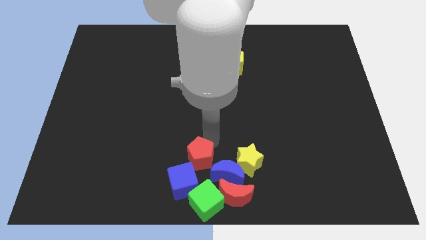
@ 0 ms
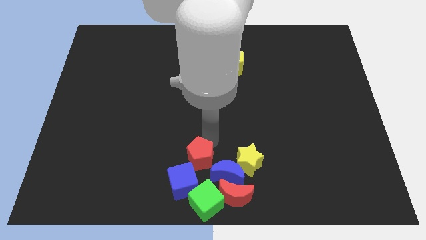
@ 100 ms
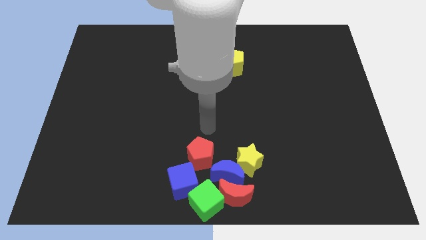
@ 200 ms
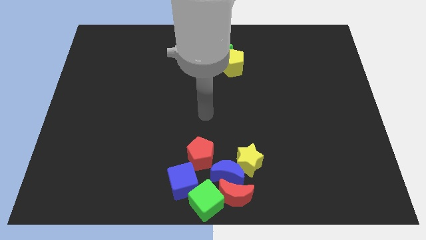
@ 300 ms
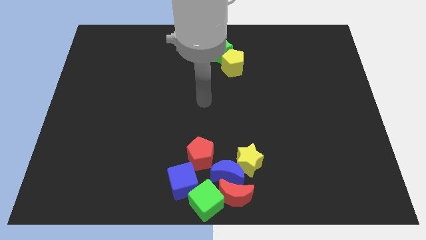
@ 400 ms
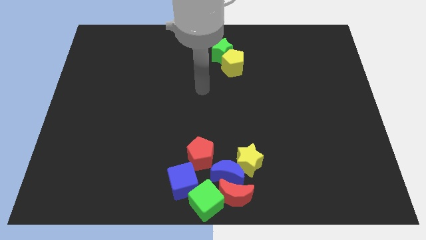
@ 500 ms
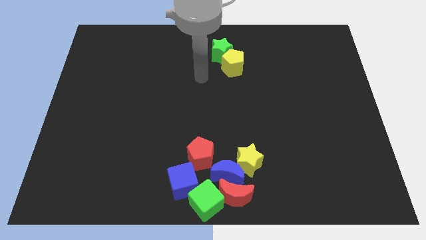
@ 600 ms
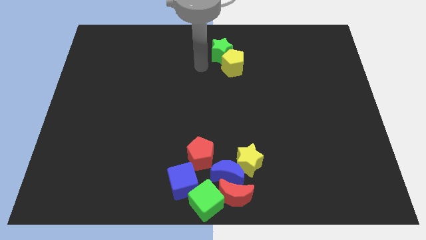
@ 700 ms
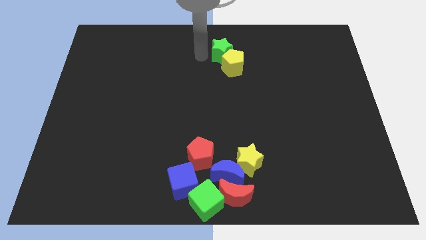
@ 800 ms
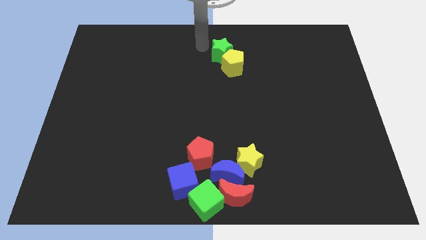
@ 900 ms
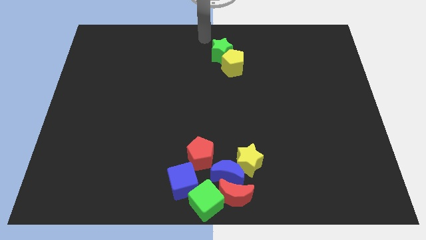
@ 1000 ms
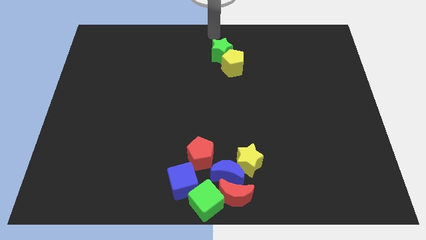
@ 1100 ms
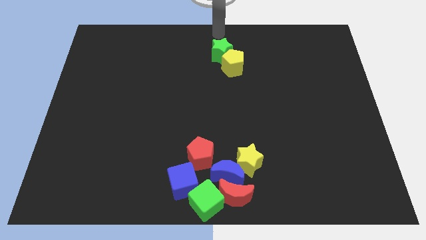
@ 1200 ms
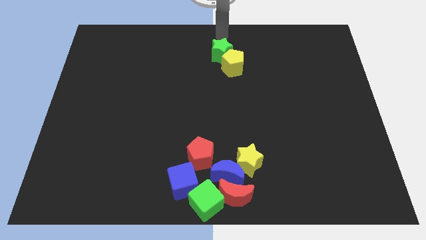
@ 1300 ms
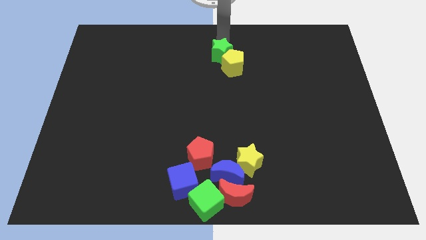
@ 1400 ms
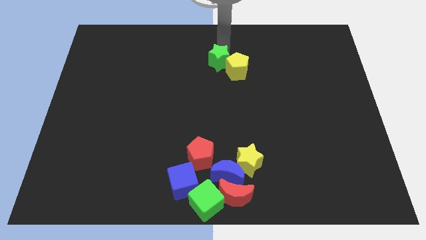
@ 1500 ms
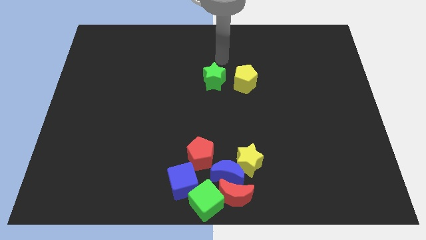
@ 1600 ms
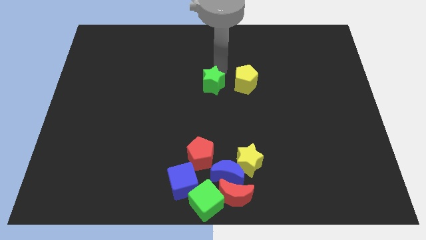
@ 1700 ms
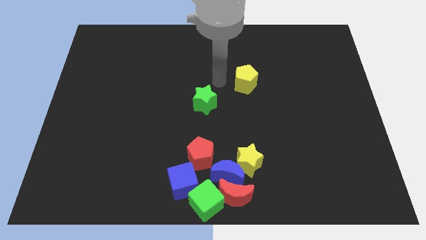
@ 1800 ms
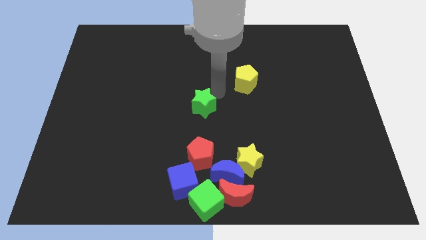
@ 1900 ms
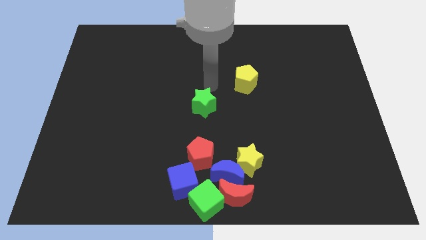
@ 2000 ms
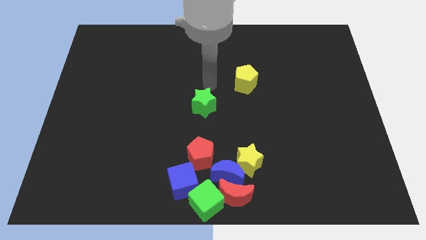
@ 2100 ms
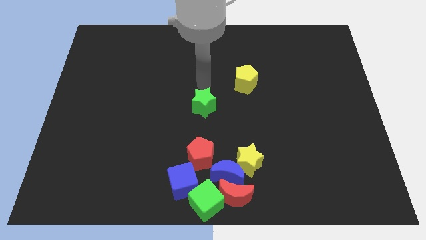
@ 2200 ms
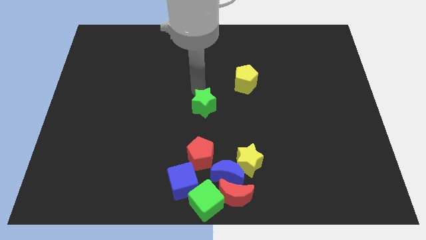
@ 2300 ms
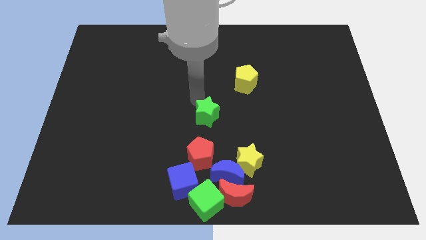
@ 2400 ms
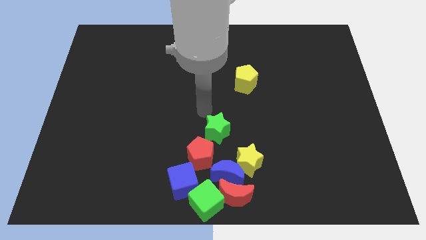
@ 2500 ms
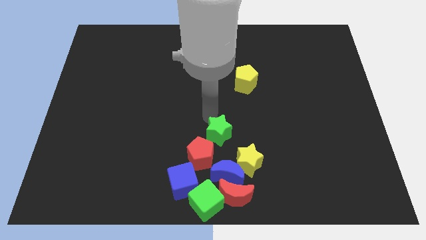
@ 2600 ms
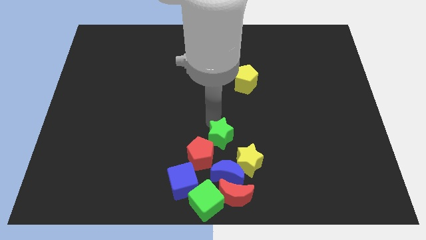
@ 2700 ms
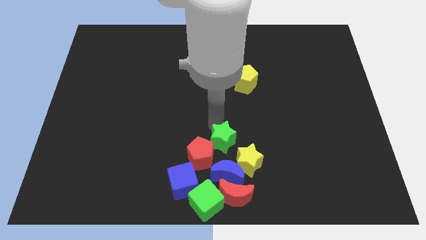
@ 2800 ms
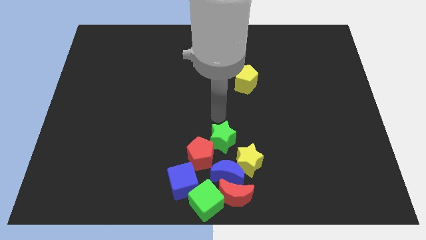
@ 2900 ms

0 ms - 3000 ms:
place the green star at the top right side of red pentagon

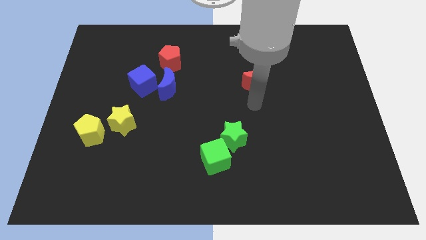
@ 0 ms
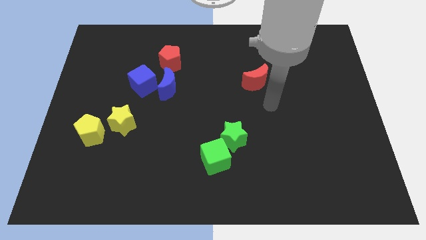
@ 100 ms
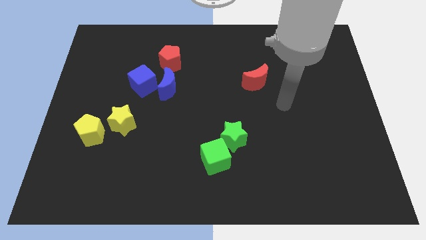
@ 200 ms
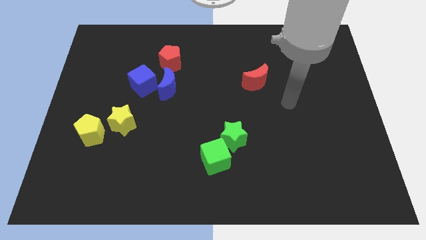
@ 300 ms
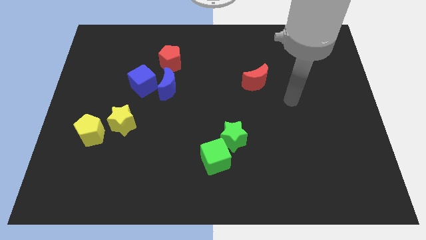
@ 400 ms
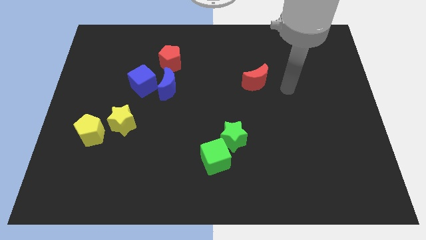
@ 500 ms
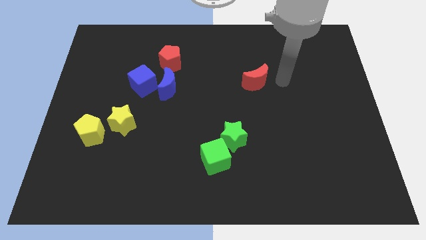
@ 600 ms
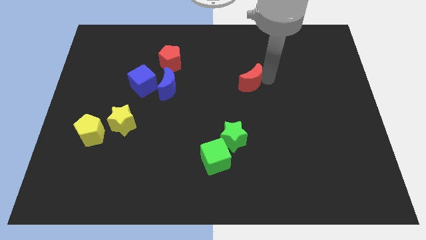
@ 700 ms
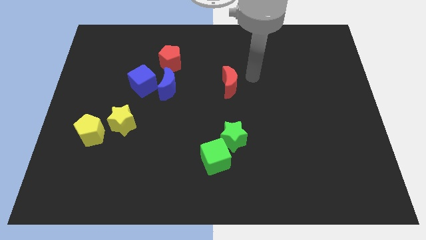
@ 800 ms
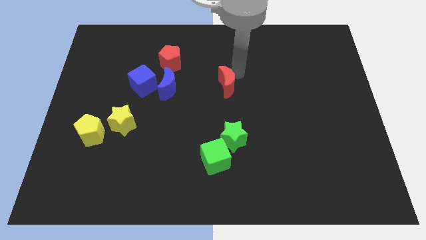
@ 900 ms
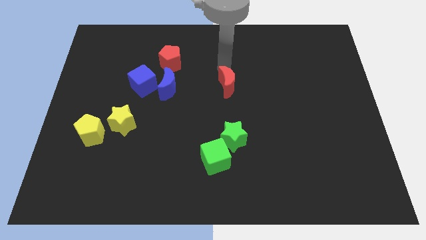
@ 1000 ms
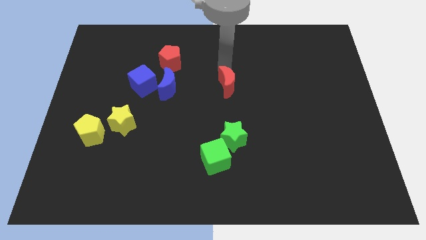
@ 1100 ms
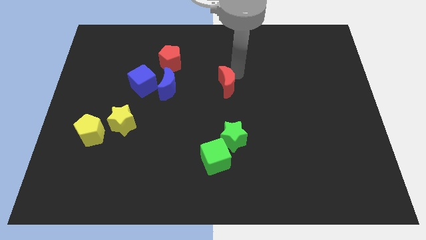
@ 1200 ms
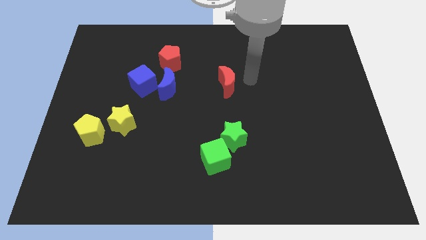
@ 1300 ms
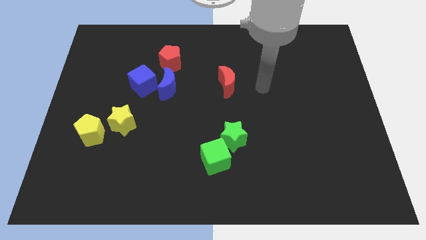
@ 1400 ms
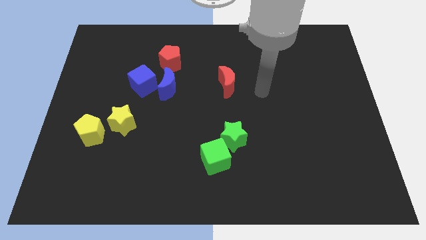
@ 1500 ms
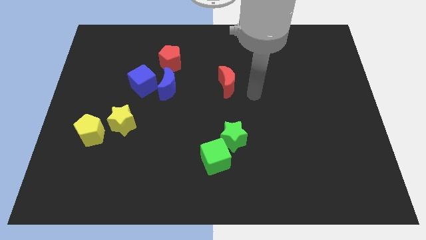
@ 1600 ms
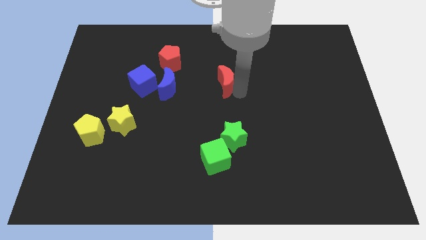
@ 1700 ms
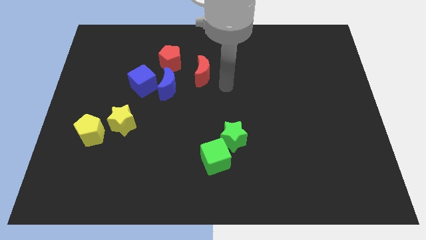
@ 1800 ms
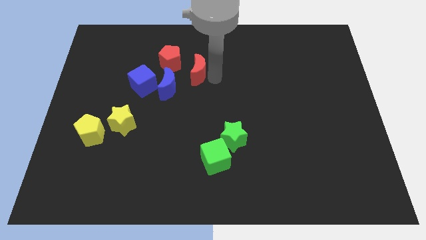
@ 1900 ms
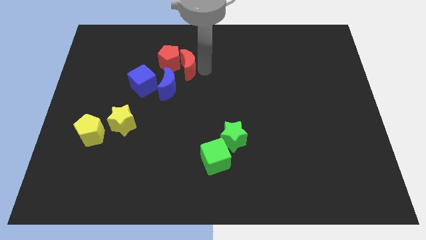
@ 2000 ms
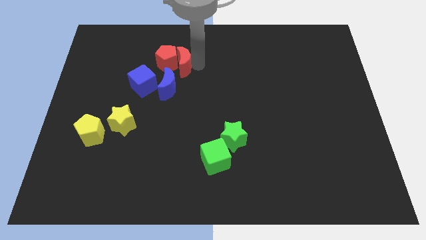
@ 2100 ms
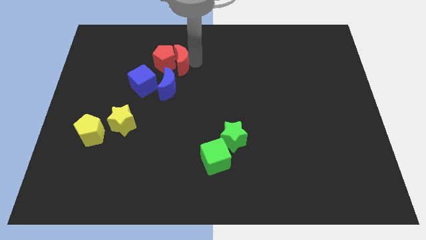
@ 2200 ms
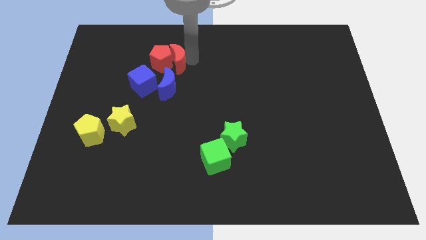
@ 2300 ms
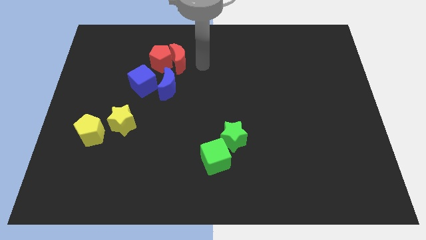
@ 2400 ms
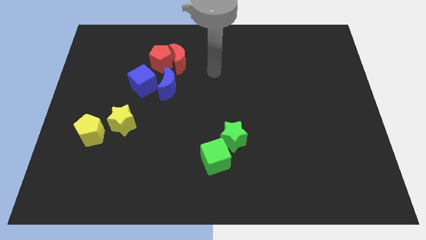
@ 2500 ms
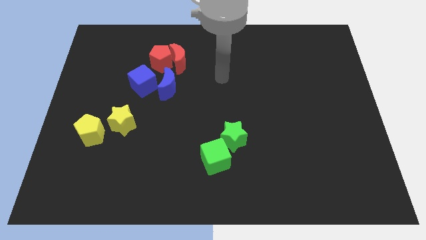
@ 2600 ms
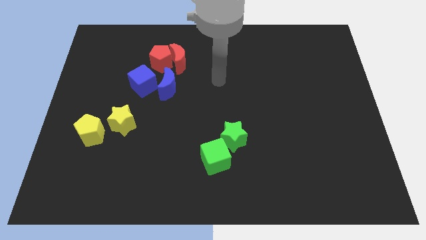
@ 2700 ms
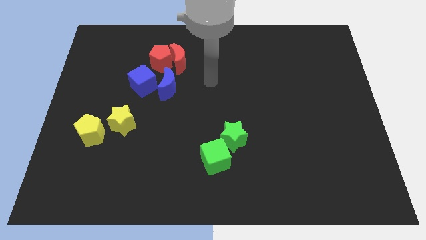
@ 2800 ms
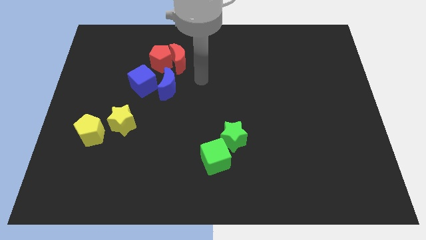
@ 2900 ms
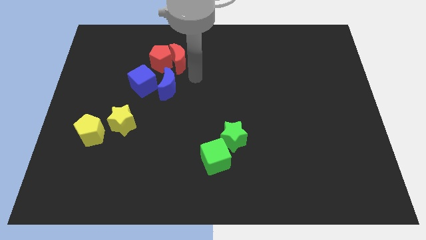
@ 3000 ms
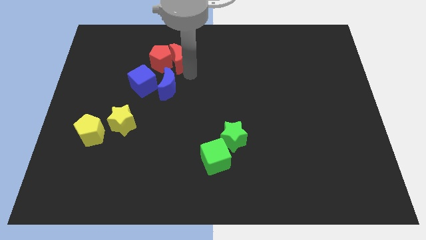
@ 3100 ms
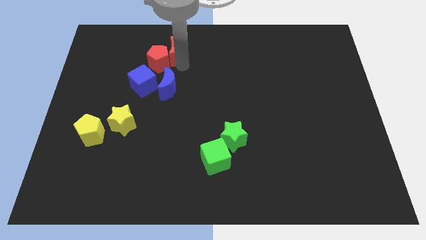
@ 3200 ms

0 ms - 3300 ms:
slide the red moon into the red pentagon

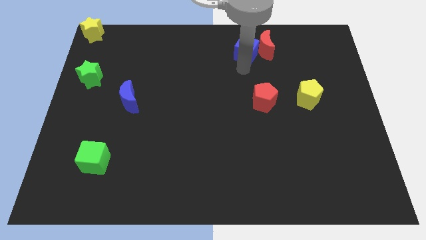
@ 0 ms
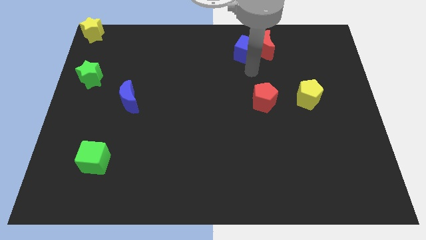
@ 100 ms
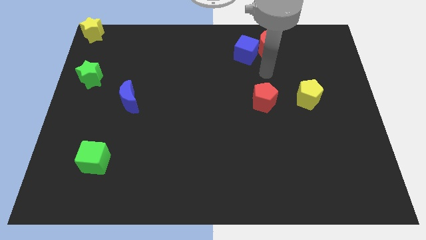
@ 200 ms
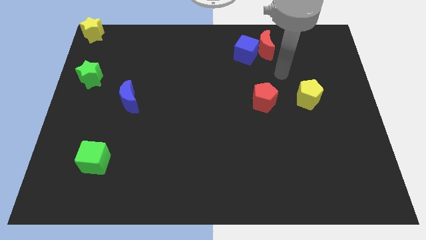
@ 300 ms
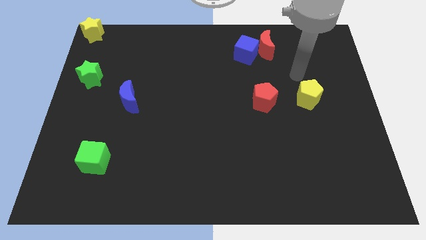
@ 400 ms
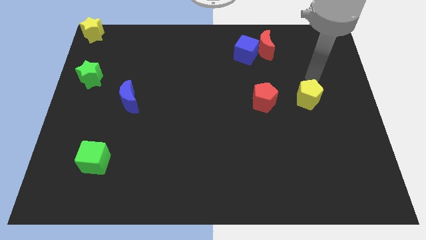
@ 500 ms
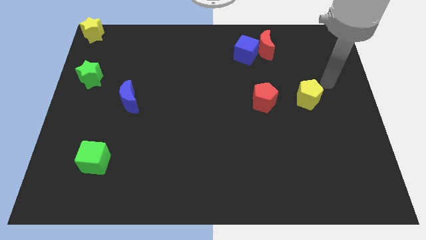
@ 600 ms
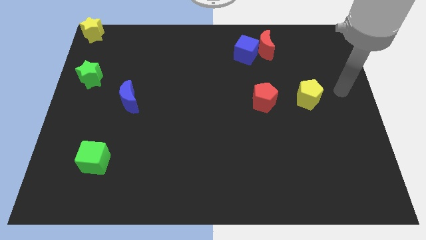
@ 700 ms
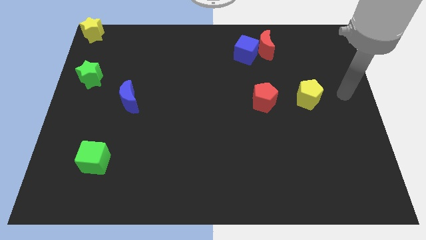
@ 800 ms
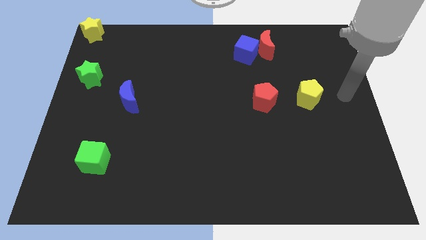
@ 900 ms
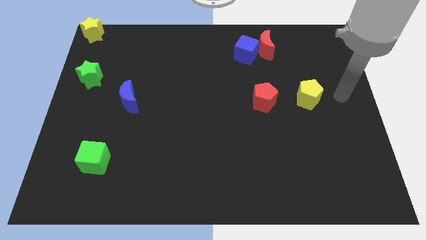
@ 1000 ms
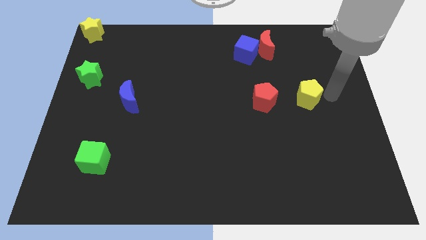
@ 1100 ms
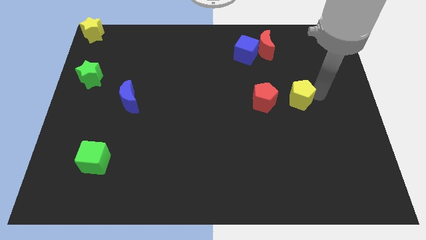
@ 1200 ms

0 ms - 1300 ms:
point your arm to the right side of yellow pentagon

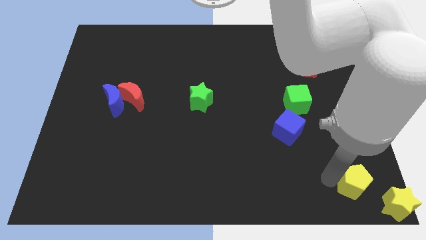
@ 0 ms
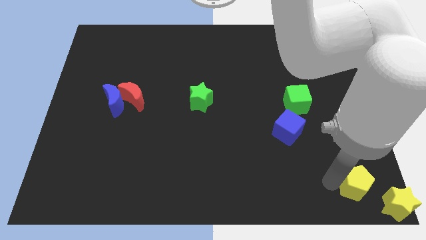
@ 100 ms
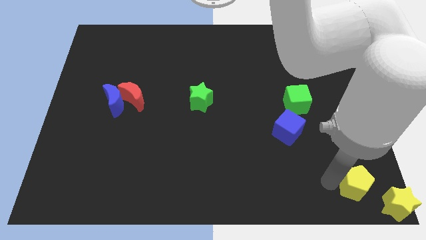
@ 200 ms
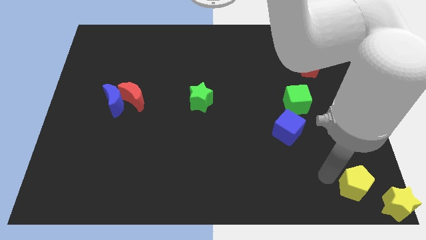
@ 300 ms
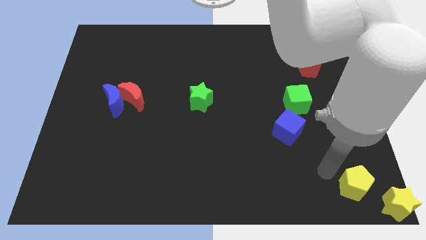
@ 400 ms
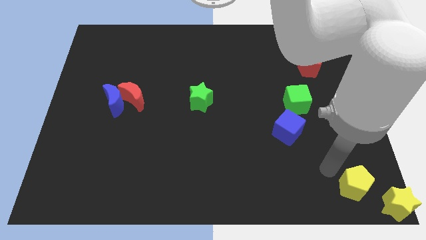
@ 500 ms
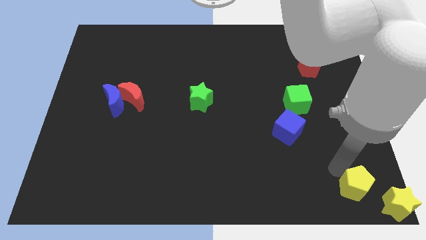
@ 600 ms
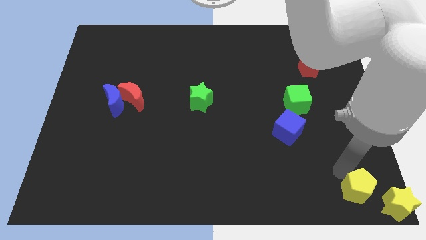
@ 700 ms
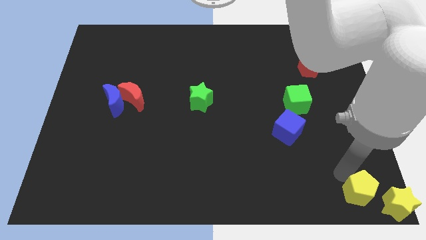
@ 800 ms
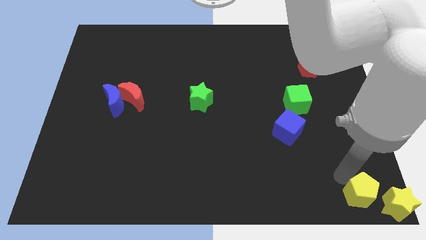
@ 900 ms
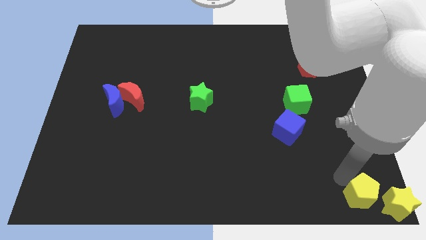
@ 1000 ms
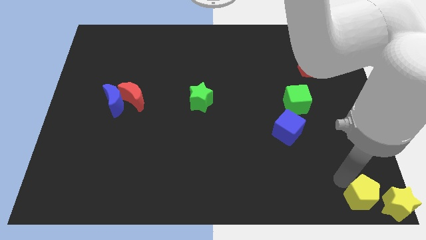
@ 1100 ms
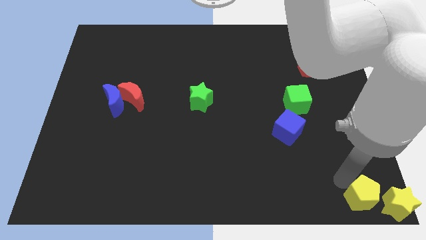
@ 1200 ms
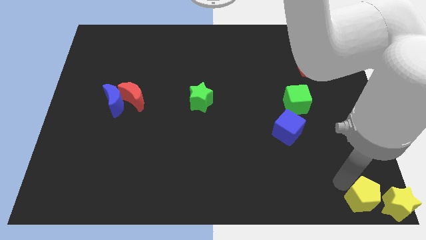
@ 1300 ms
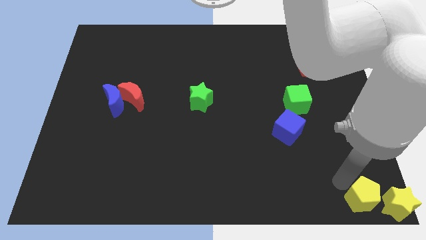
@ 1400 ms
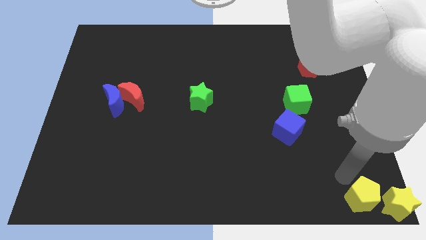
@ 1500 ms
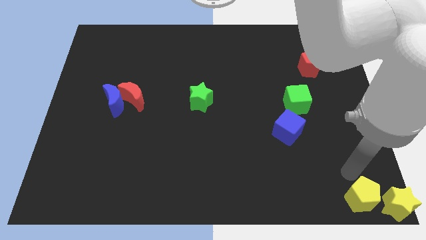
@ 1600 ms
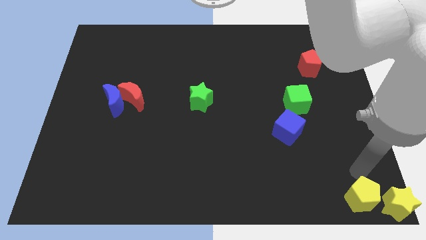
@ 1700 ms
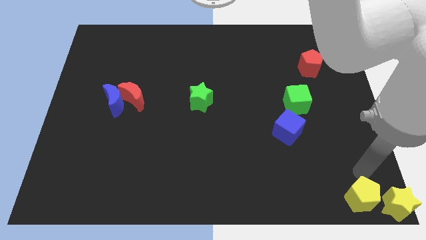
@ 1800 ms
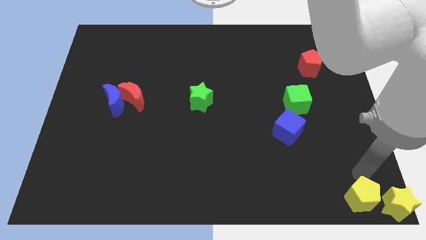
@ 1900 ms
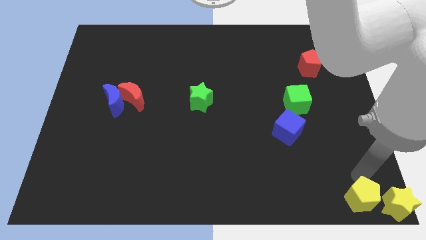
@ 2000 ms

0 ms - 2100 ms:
push the yellow pentagon close to yellow star
